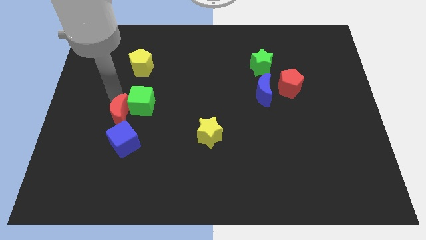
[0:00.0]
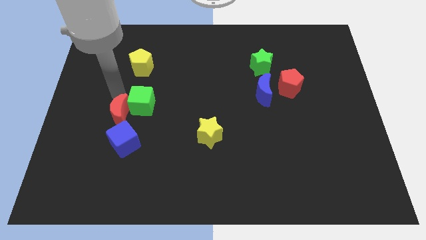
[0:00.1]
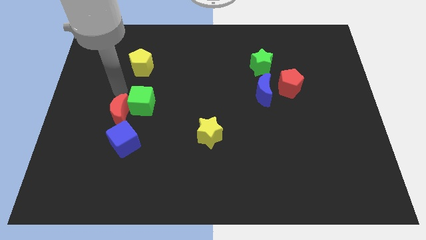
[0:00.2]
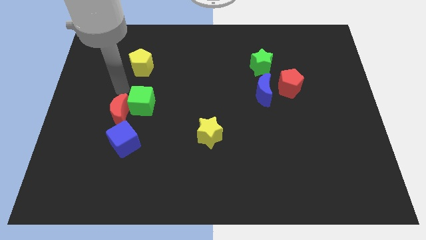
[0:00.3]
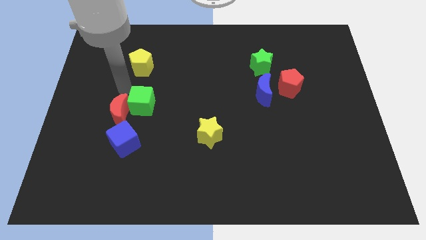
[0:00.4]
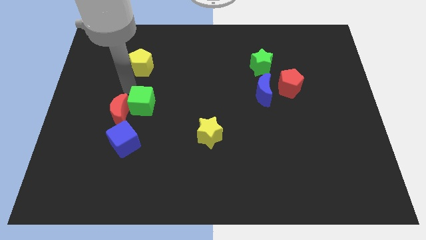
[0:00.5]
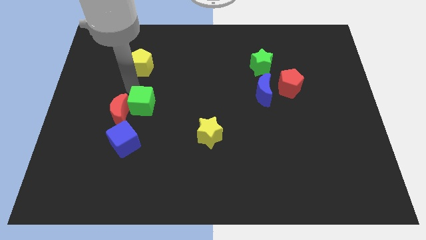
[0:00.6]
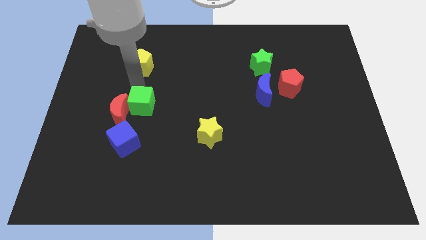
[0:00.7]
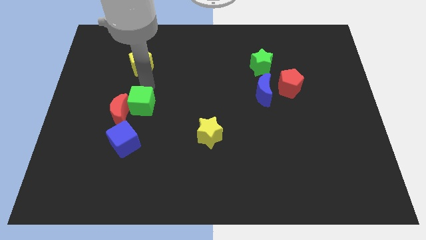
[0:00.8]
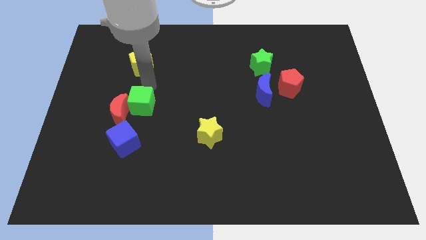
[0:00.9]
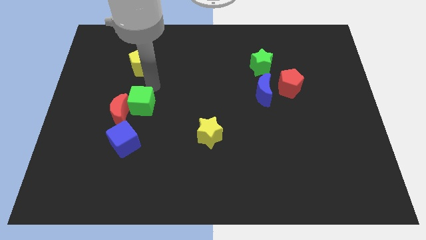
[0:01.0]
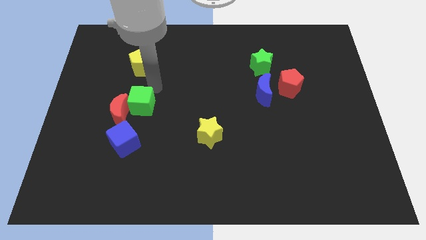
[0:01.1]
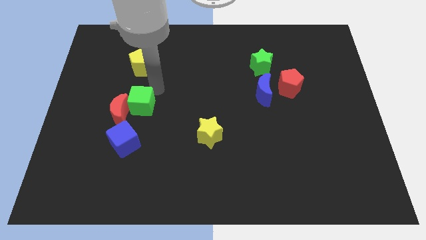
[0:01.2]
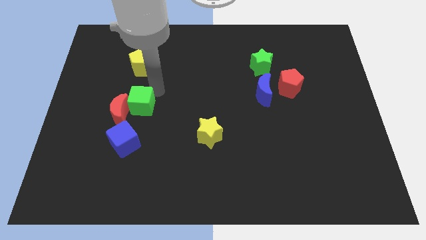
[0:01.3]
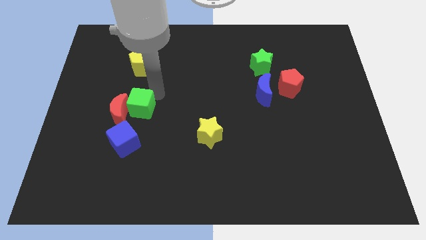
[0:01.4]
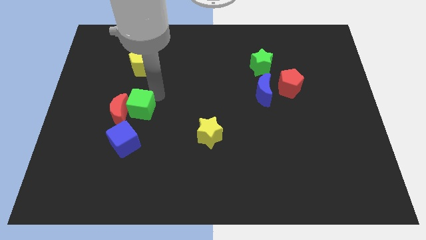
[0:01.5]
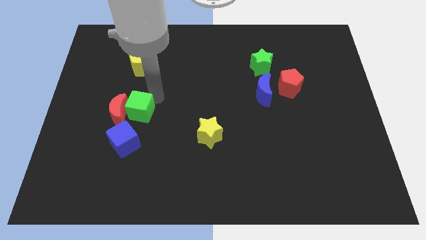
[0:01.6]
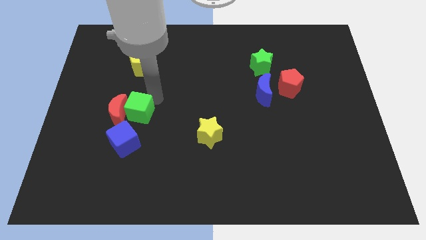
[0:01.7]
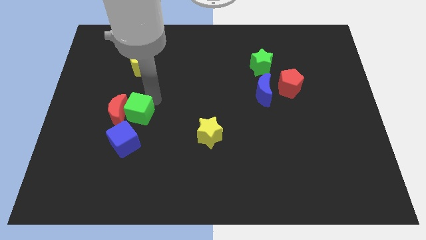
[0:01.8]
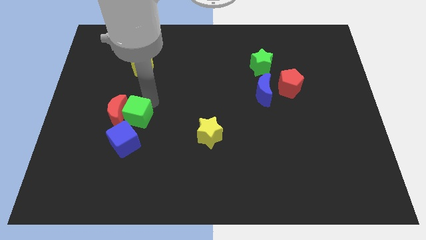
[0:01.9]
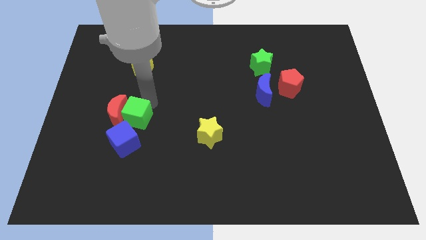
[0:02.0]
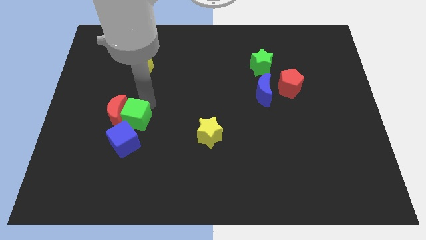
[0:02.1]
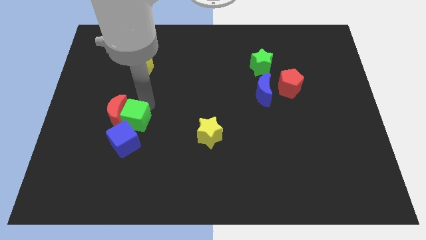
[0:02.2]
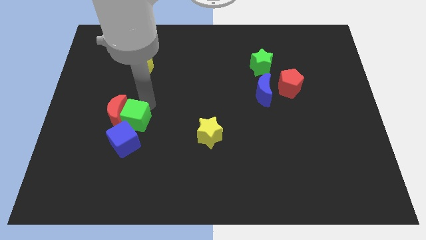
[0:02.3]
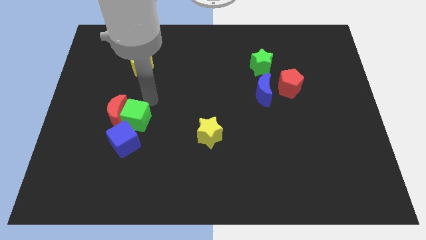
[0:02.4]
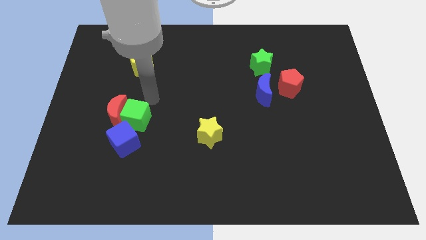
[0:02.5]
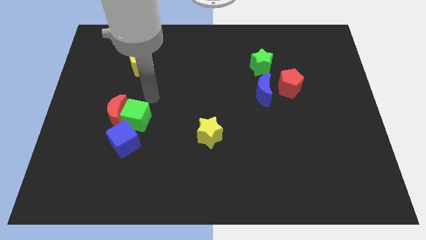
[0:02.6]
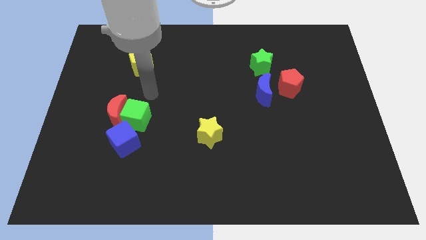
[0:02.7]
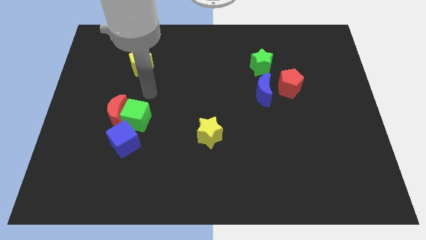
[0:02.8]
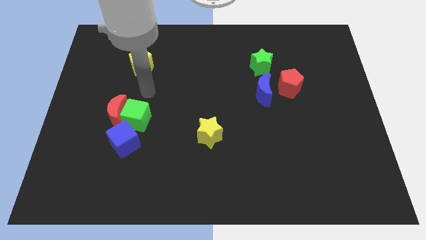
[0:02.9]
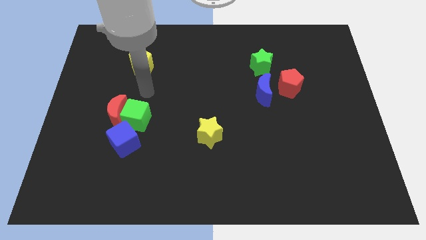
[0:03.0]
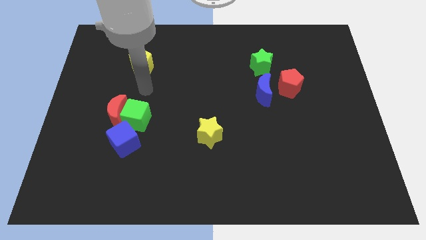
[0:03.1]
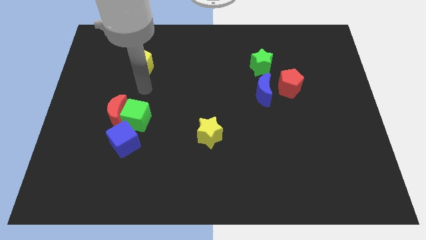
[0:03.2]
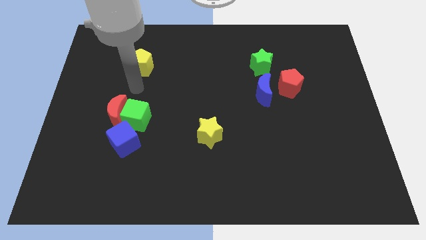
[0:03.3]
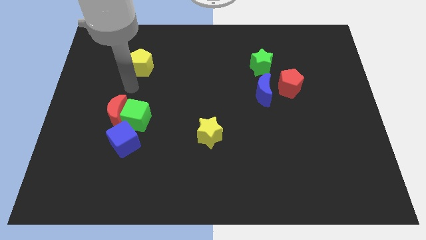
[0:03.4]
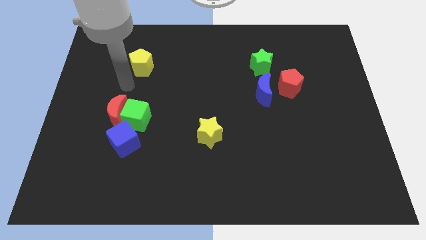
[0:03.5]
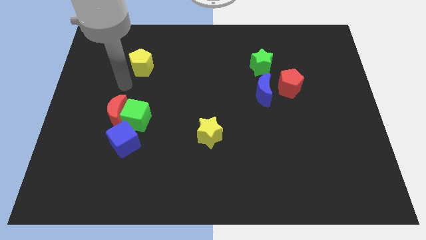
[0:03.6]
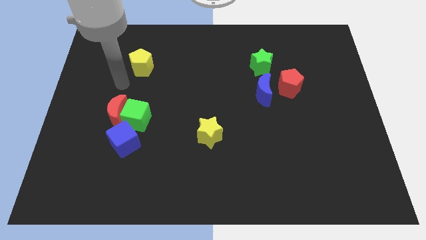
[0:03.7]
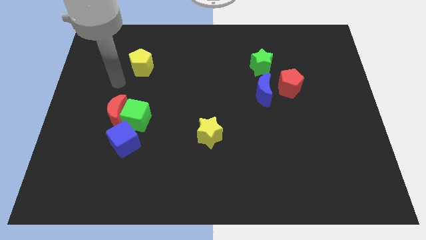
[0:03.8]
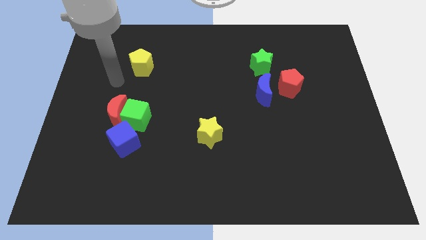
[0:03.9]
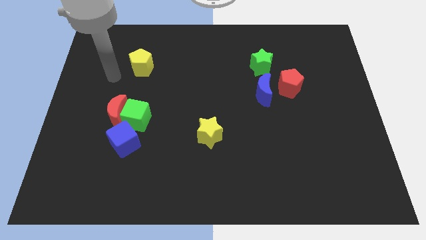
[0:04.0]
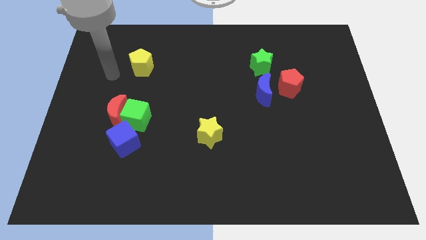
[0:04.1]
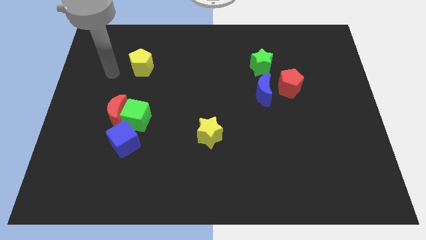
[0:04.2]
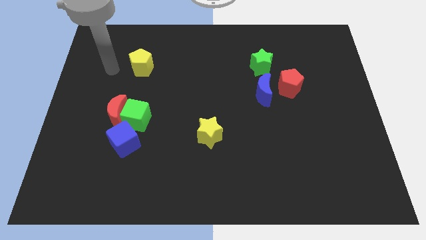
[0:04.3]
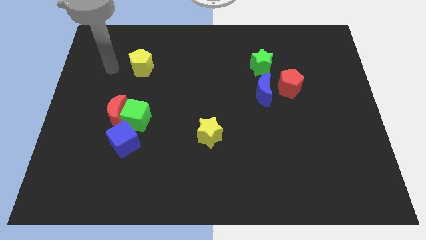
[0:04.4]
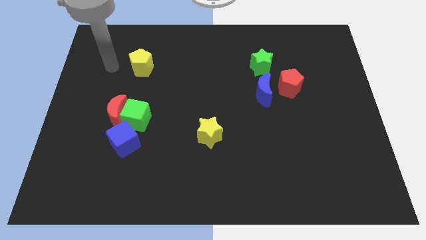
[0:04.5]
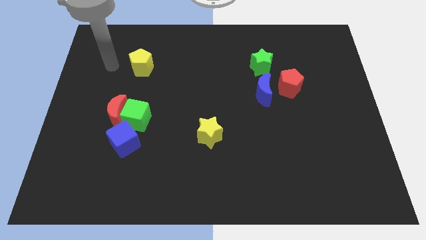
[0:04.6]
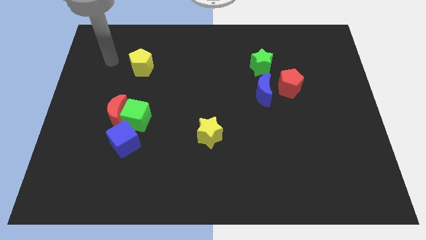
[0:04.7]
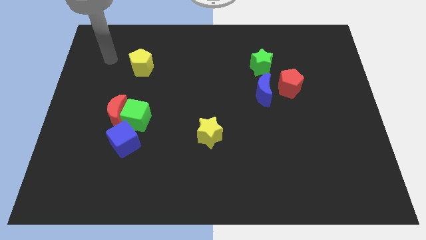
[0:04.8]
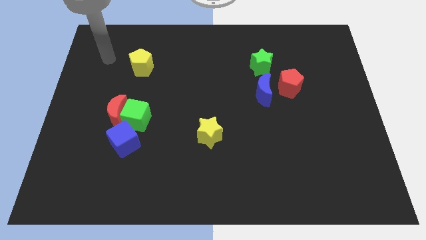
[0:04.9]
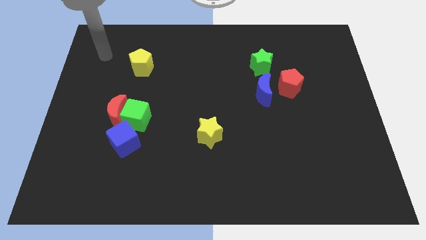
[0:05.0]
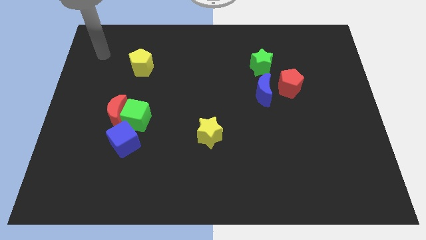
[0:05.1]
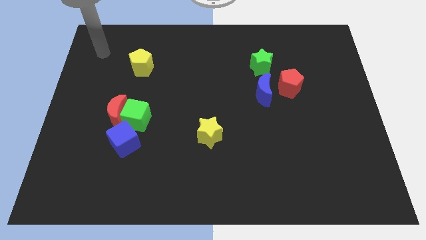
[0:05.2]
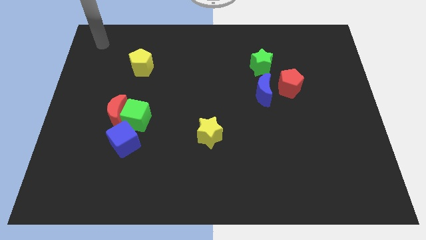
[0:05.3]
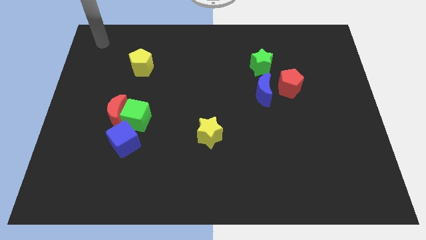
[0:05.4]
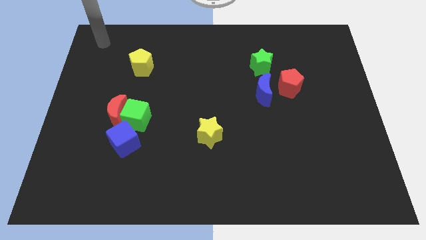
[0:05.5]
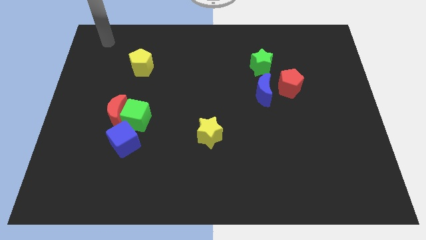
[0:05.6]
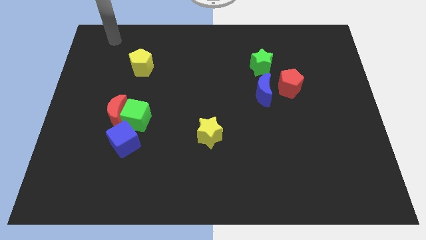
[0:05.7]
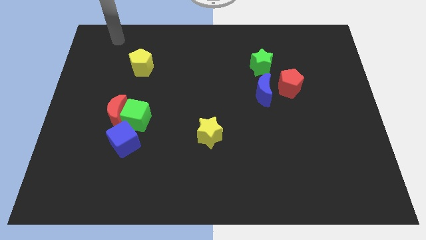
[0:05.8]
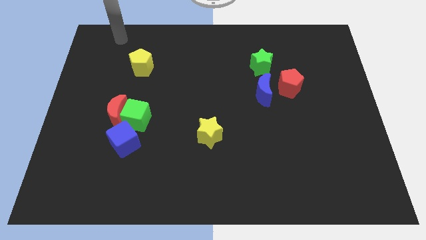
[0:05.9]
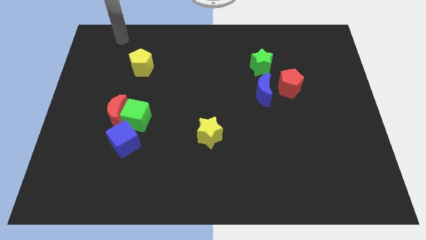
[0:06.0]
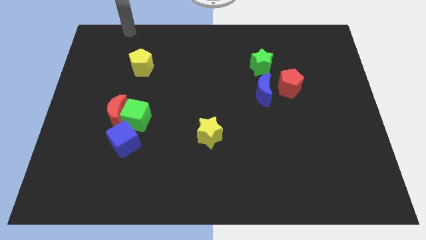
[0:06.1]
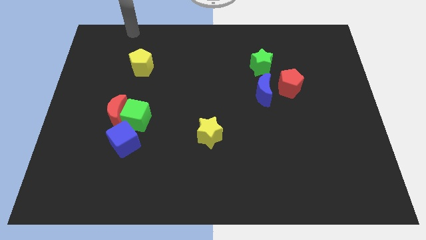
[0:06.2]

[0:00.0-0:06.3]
push the green cube slightly

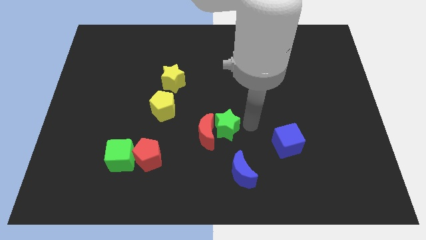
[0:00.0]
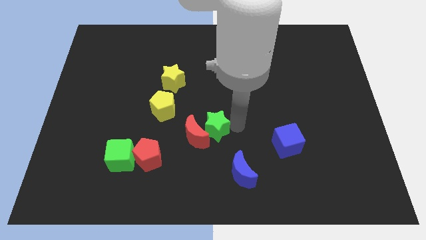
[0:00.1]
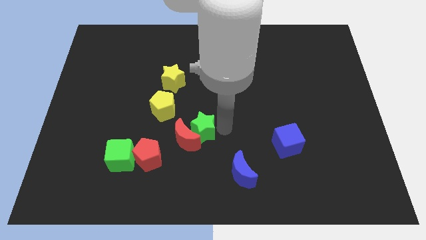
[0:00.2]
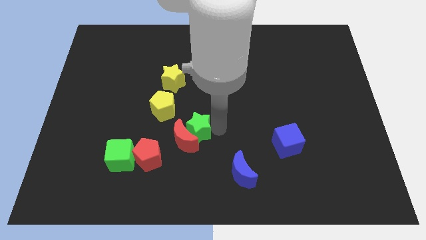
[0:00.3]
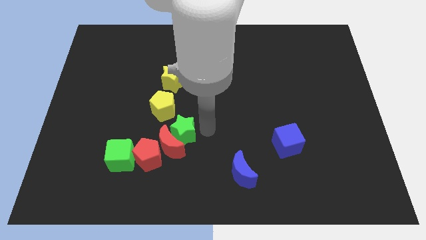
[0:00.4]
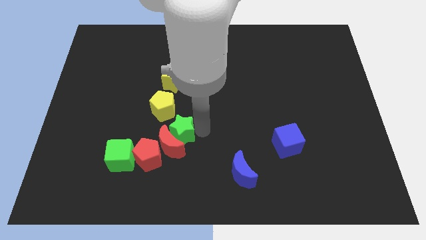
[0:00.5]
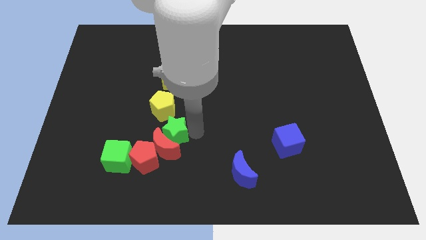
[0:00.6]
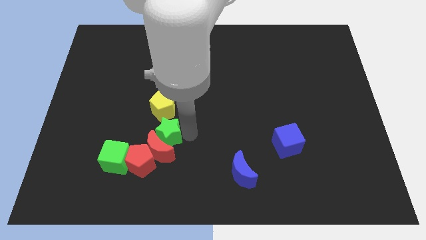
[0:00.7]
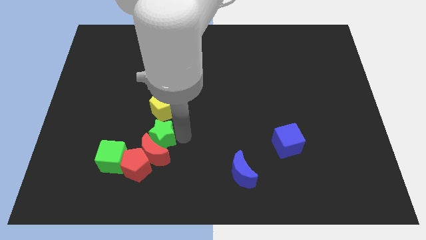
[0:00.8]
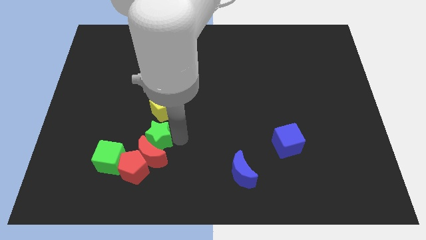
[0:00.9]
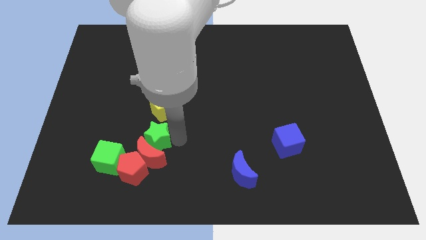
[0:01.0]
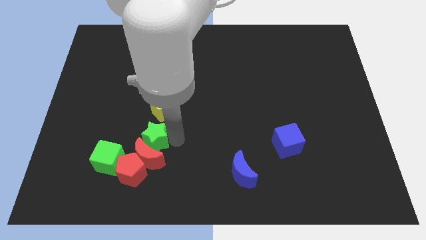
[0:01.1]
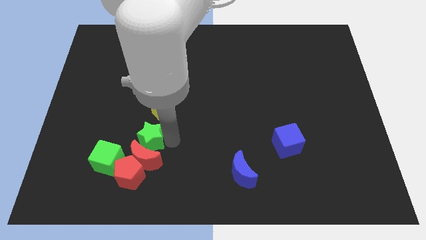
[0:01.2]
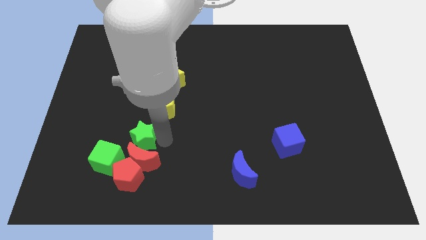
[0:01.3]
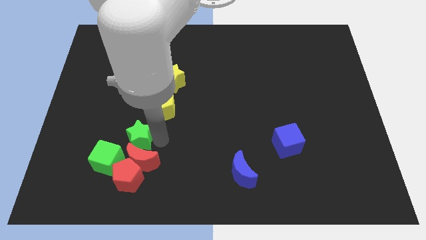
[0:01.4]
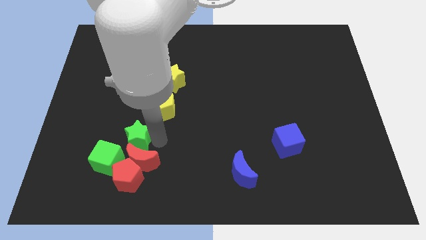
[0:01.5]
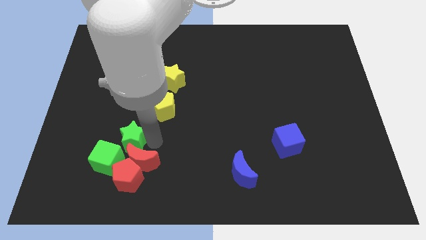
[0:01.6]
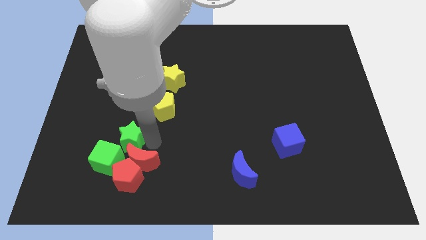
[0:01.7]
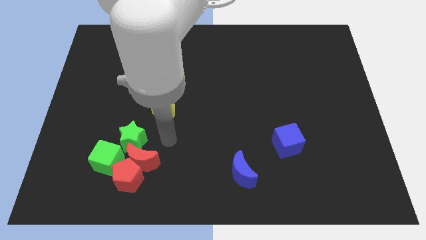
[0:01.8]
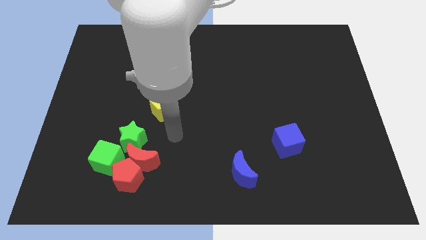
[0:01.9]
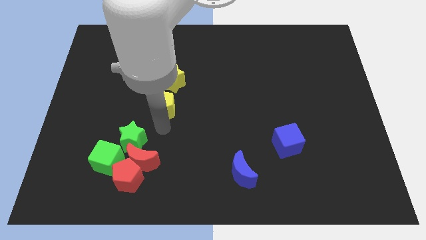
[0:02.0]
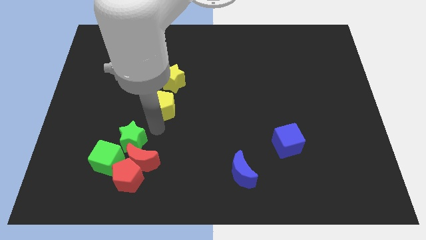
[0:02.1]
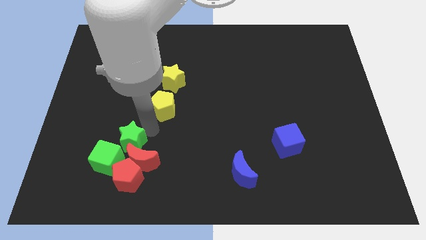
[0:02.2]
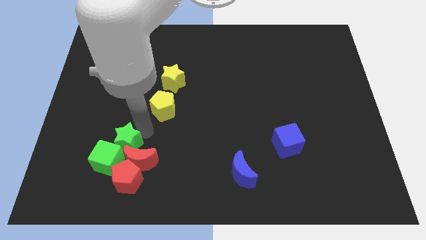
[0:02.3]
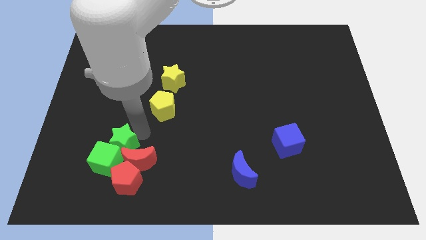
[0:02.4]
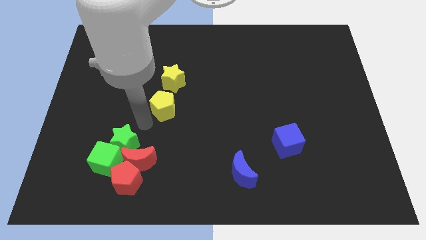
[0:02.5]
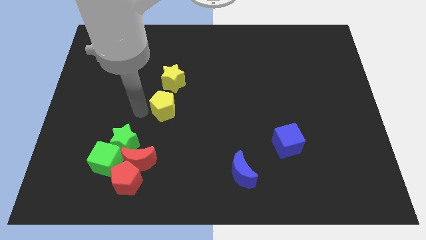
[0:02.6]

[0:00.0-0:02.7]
push the green star into the group of blocks
